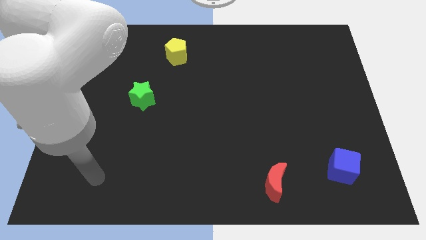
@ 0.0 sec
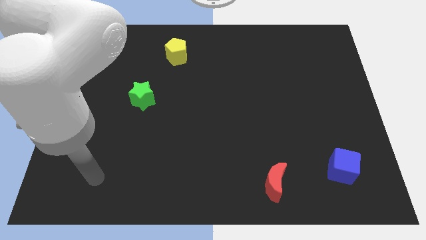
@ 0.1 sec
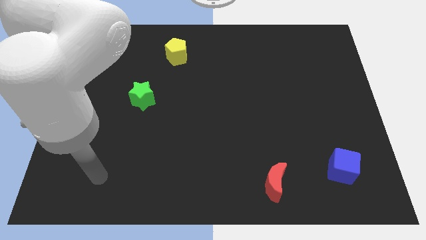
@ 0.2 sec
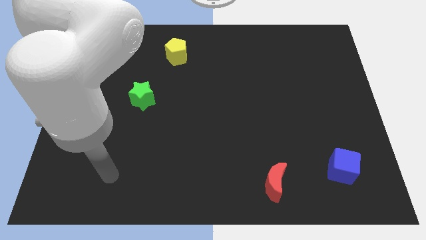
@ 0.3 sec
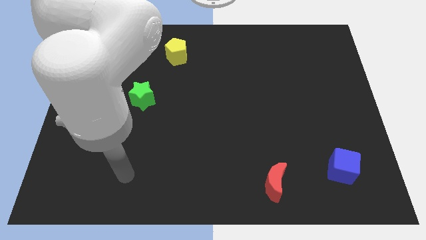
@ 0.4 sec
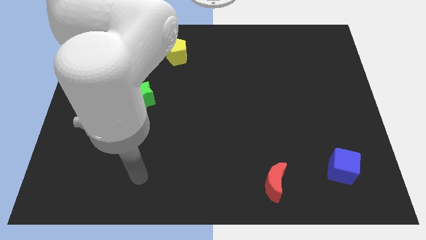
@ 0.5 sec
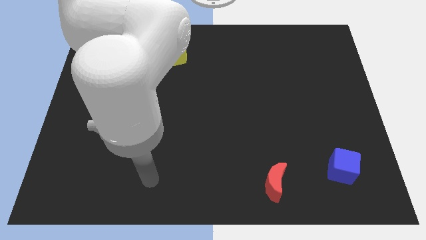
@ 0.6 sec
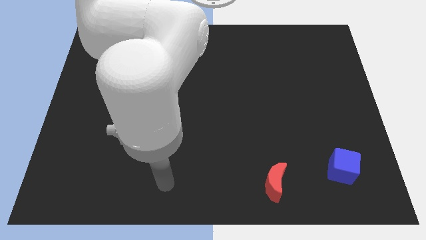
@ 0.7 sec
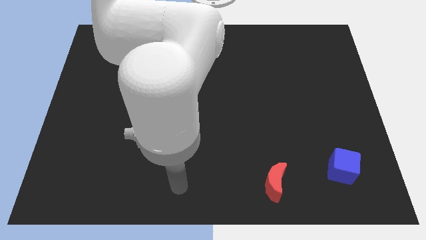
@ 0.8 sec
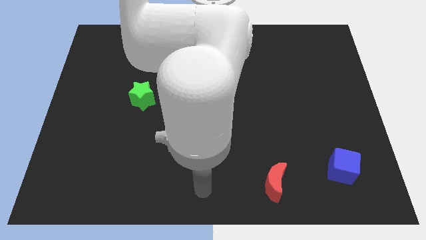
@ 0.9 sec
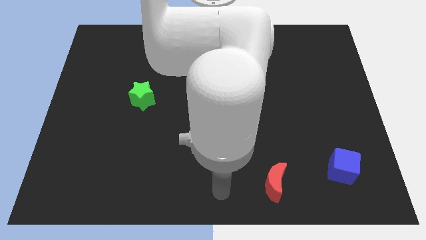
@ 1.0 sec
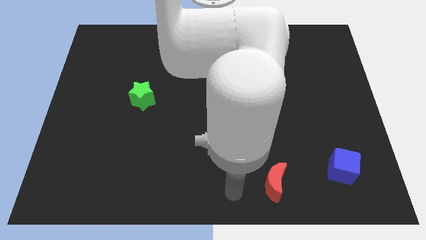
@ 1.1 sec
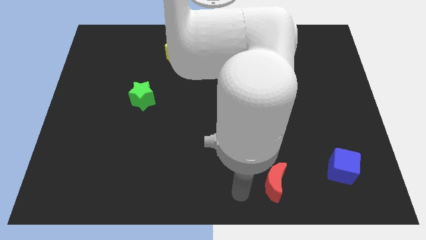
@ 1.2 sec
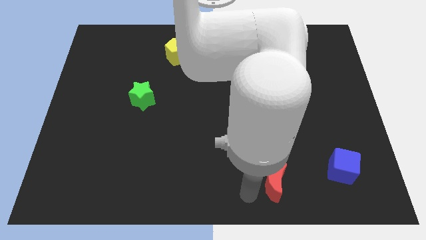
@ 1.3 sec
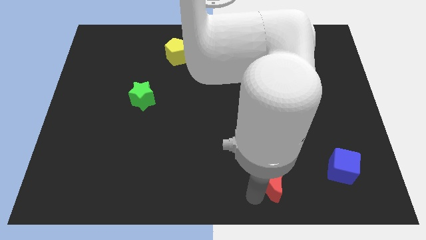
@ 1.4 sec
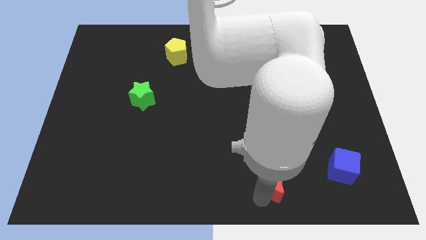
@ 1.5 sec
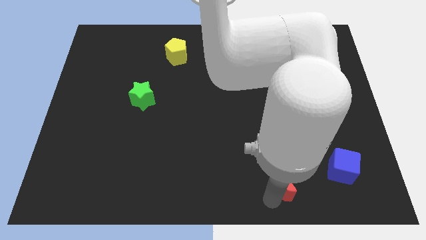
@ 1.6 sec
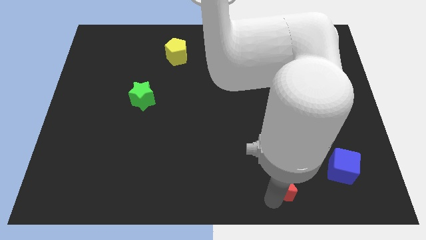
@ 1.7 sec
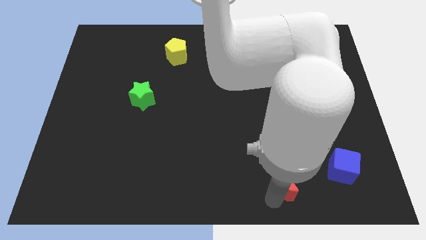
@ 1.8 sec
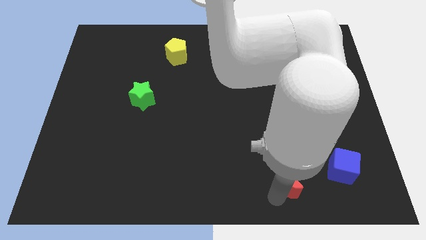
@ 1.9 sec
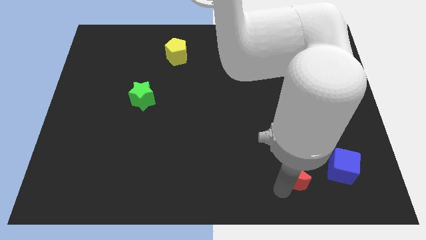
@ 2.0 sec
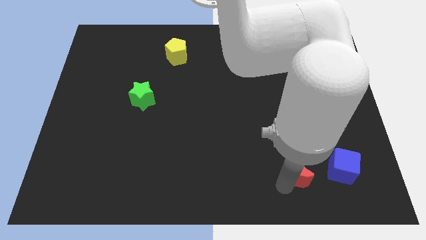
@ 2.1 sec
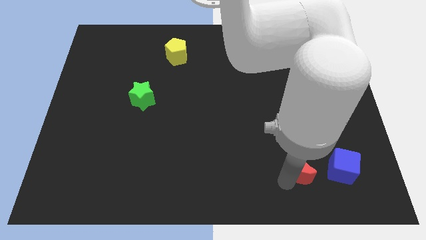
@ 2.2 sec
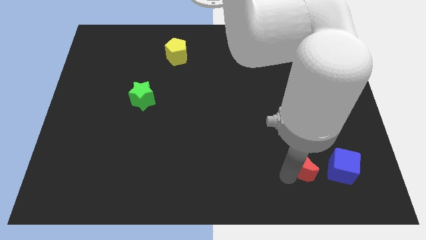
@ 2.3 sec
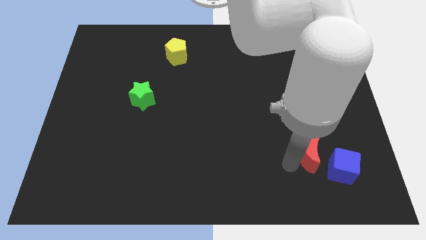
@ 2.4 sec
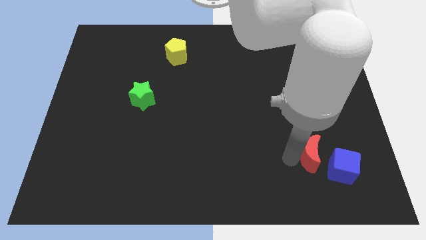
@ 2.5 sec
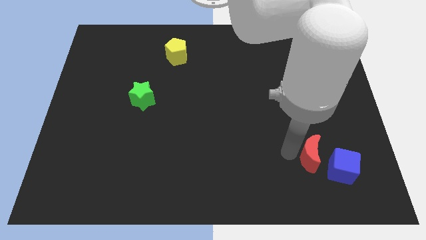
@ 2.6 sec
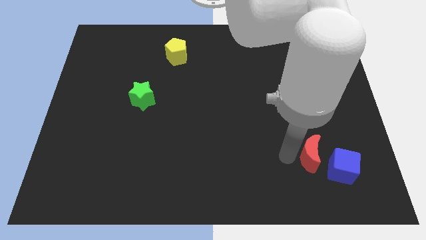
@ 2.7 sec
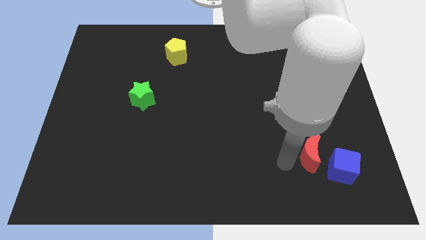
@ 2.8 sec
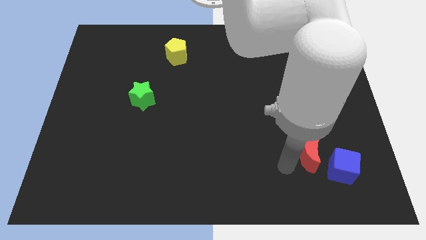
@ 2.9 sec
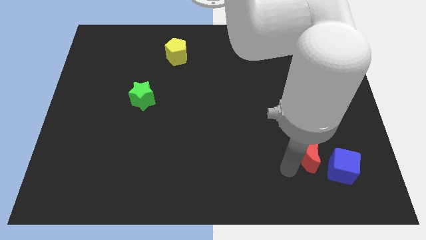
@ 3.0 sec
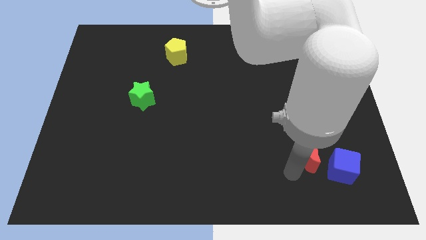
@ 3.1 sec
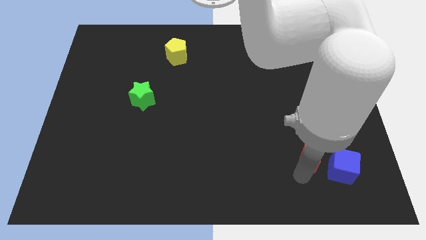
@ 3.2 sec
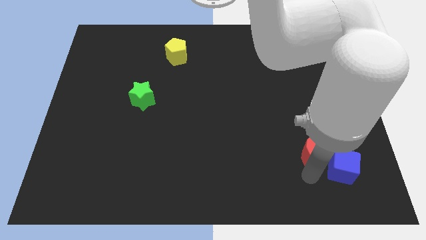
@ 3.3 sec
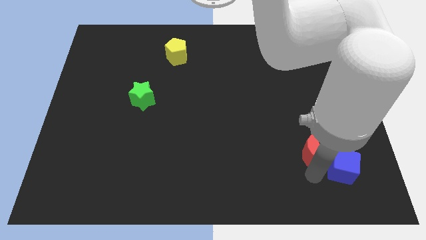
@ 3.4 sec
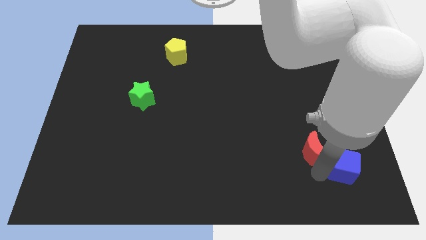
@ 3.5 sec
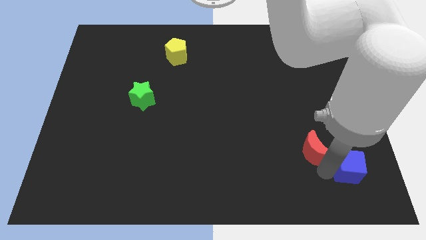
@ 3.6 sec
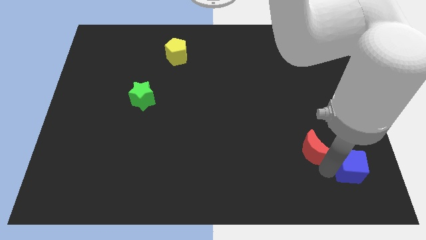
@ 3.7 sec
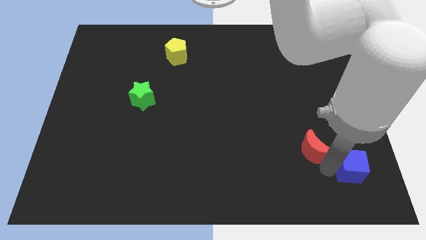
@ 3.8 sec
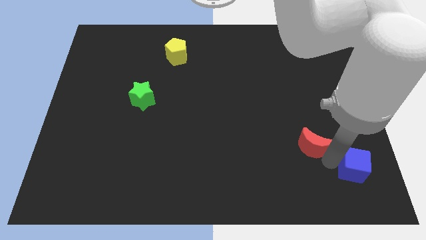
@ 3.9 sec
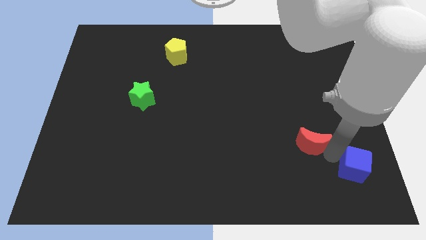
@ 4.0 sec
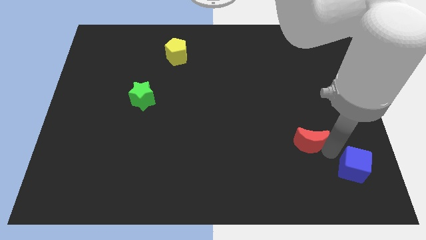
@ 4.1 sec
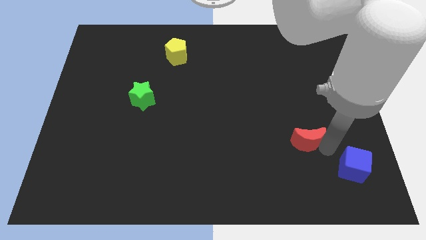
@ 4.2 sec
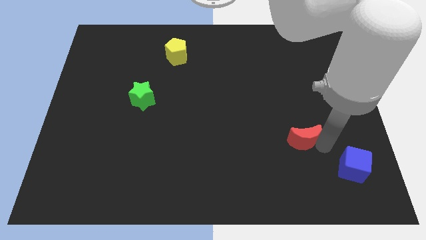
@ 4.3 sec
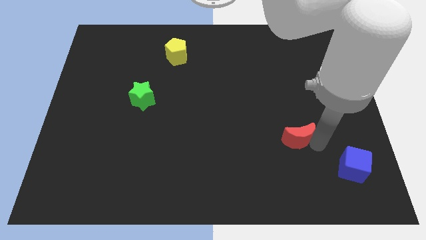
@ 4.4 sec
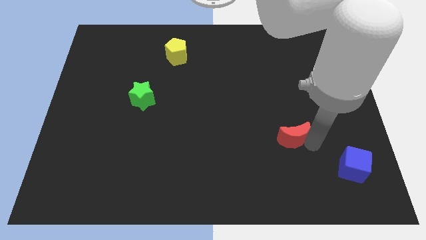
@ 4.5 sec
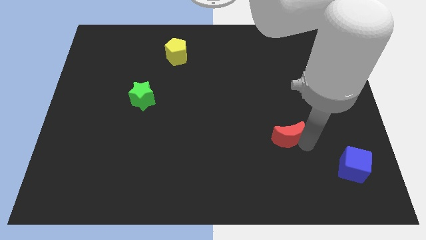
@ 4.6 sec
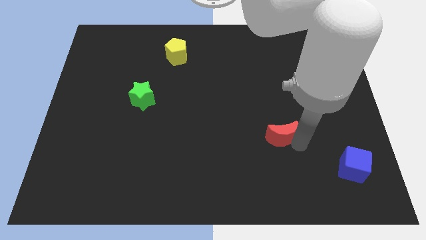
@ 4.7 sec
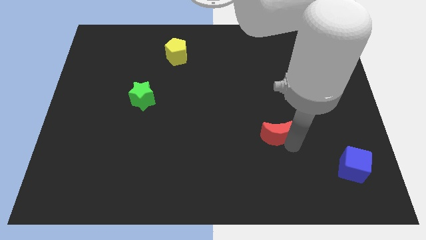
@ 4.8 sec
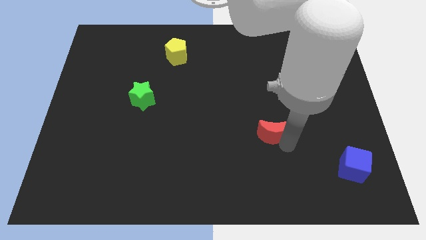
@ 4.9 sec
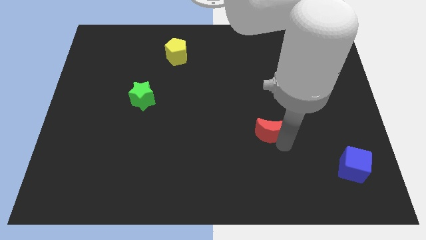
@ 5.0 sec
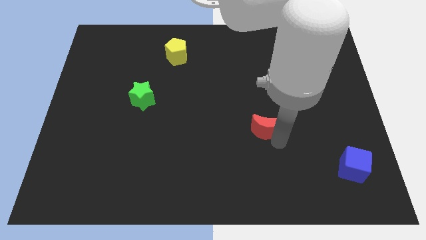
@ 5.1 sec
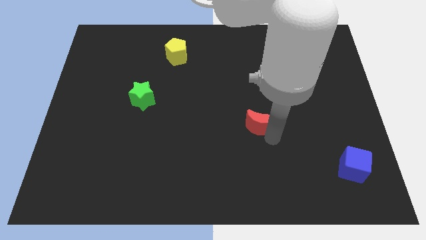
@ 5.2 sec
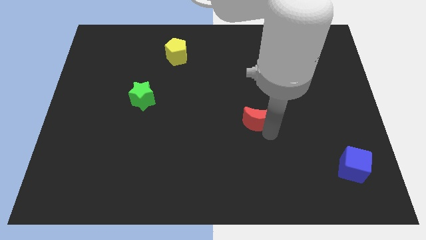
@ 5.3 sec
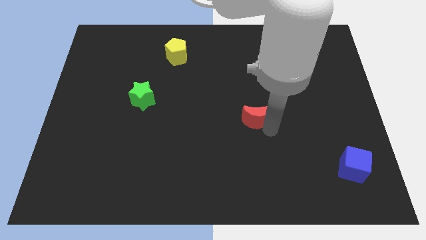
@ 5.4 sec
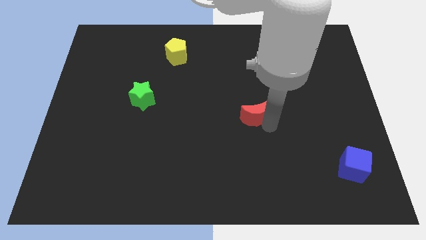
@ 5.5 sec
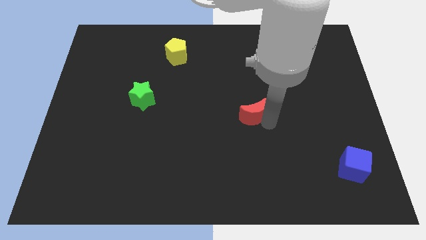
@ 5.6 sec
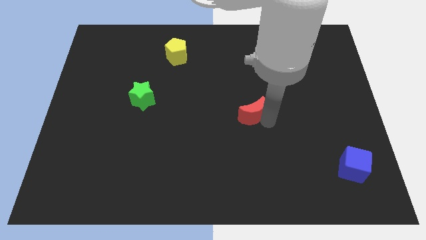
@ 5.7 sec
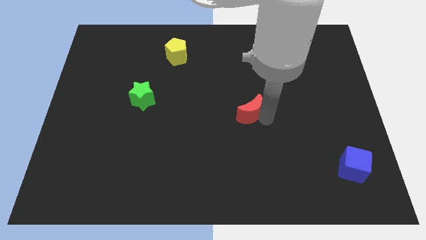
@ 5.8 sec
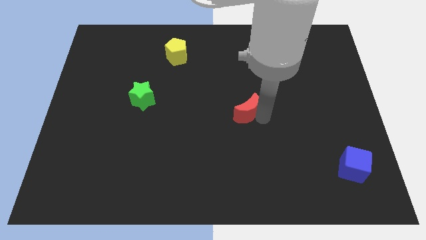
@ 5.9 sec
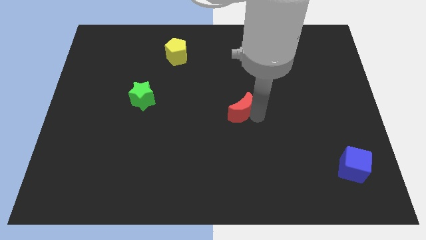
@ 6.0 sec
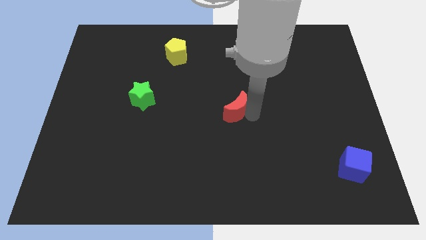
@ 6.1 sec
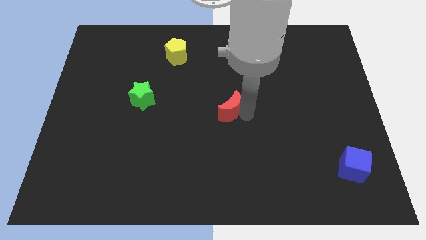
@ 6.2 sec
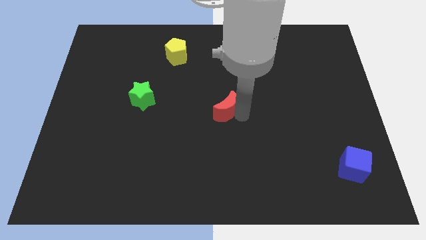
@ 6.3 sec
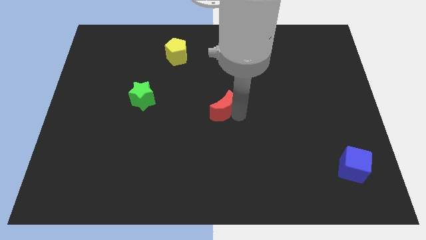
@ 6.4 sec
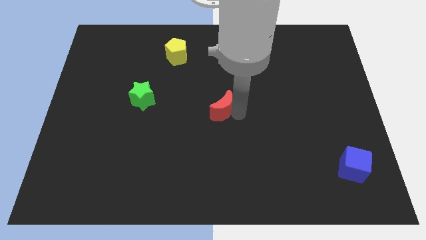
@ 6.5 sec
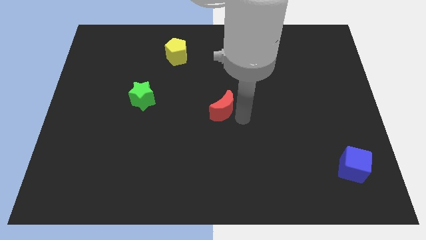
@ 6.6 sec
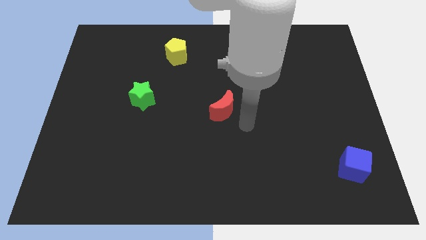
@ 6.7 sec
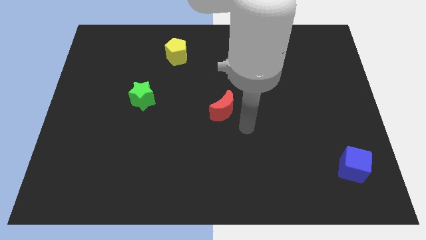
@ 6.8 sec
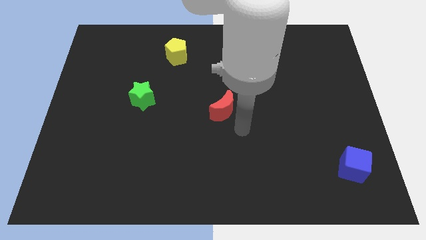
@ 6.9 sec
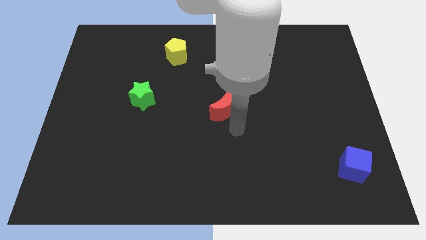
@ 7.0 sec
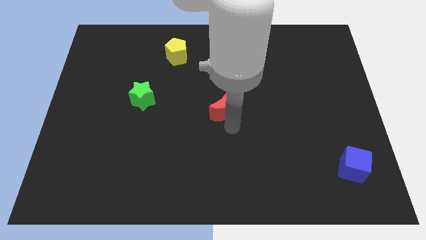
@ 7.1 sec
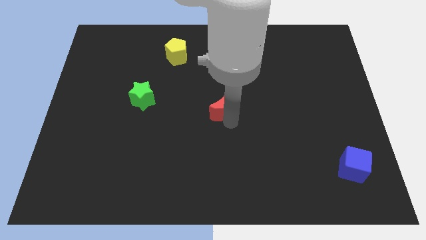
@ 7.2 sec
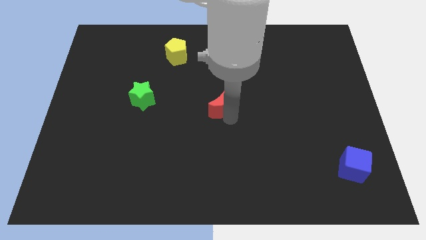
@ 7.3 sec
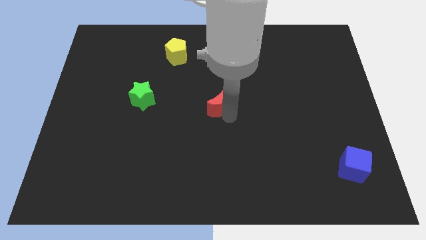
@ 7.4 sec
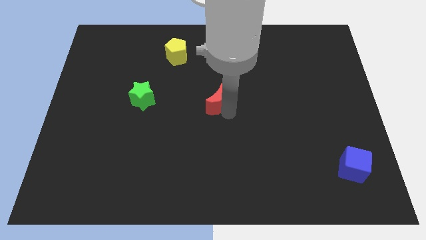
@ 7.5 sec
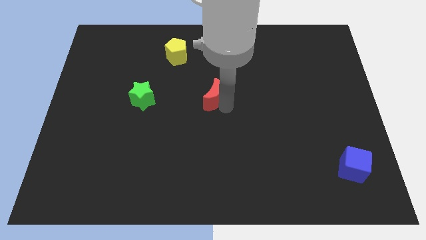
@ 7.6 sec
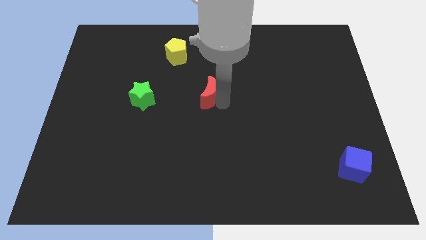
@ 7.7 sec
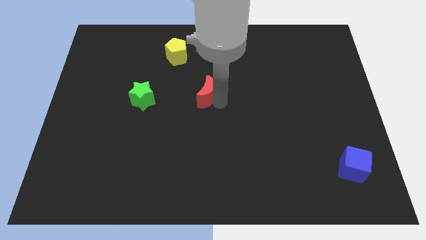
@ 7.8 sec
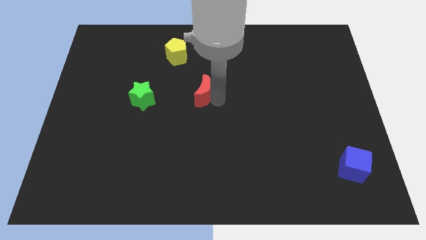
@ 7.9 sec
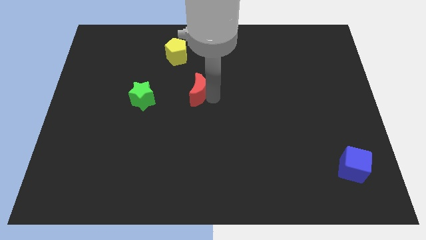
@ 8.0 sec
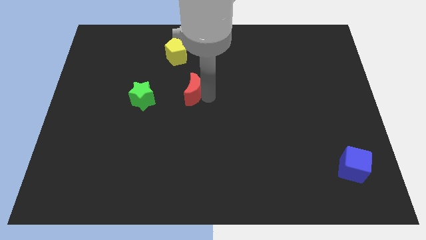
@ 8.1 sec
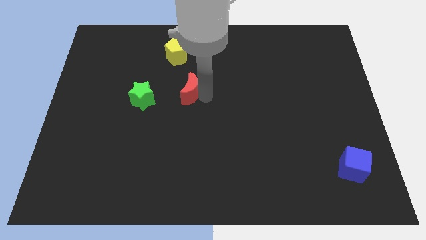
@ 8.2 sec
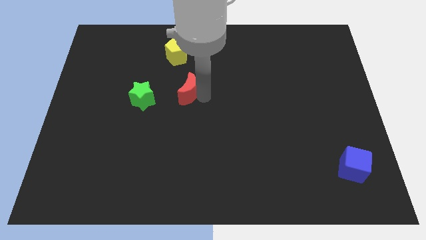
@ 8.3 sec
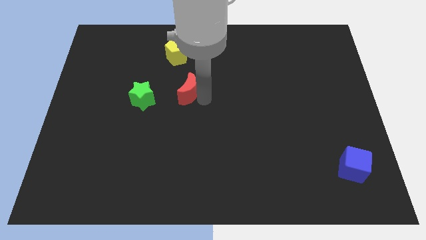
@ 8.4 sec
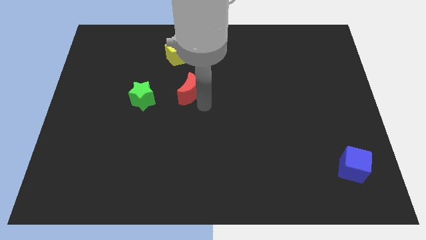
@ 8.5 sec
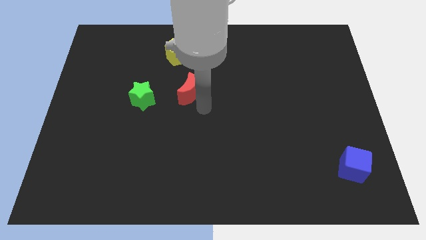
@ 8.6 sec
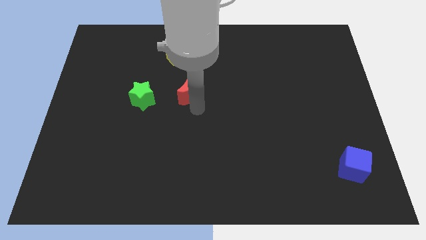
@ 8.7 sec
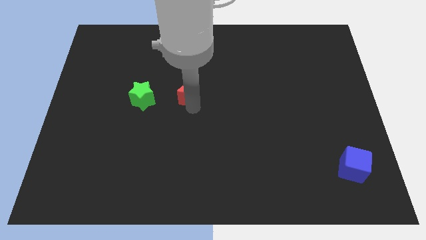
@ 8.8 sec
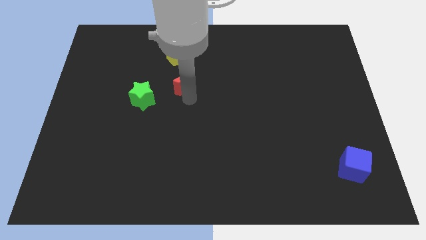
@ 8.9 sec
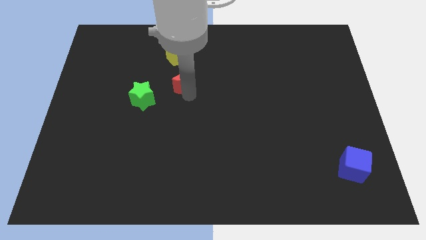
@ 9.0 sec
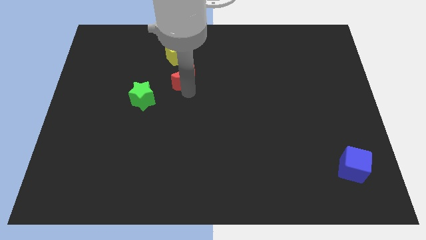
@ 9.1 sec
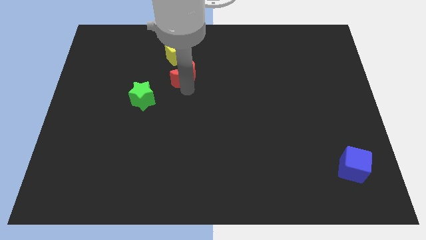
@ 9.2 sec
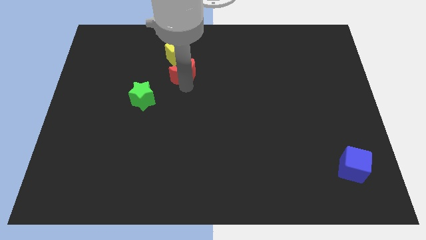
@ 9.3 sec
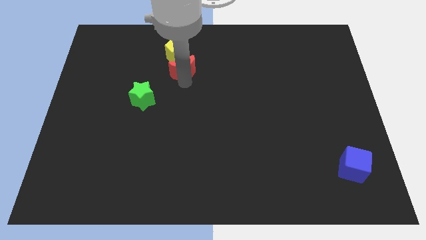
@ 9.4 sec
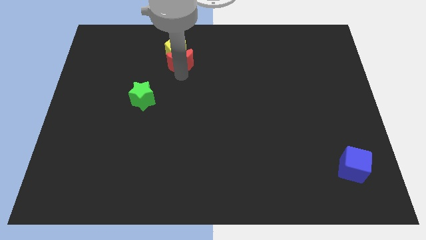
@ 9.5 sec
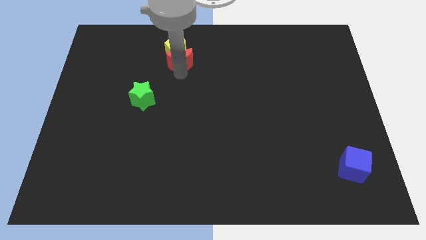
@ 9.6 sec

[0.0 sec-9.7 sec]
push the red block towards the yellow block
